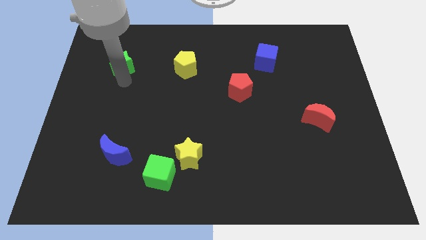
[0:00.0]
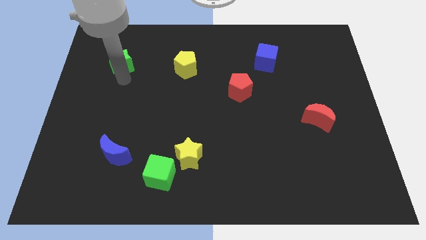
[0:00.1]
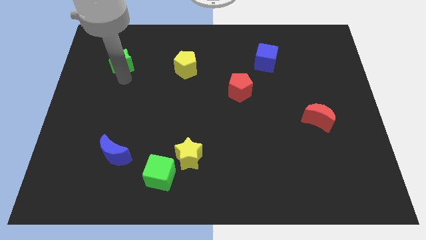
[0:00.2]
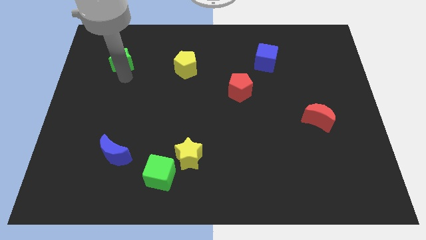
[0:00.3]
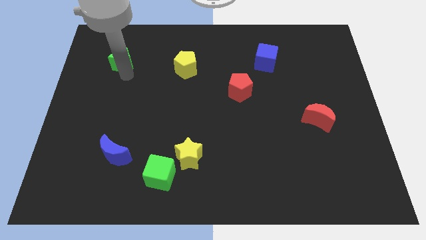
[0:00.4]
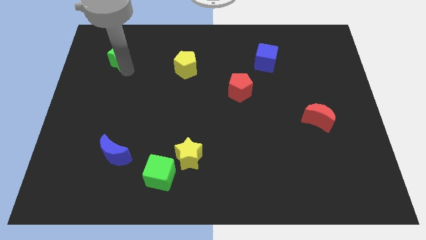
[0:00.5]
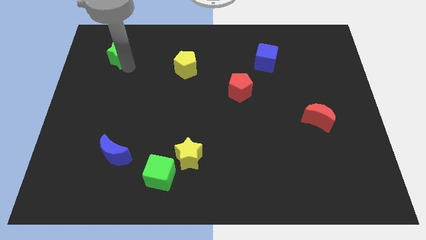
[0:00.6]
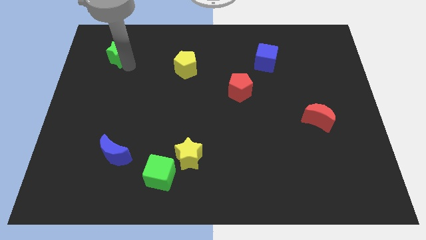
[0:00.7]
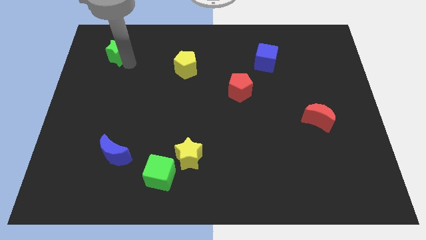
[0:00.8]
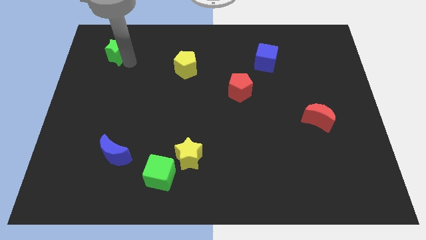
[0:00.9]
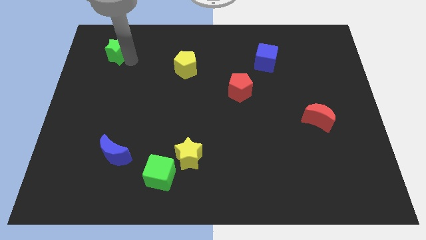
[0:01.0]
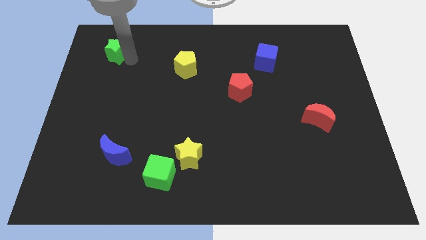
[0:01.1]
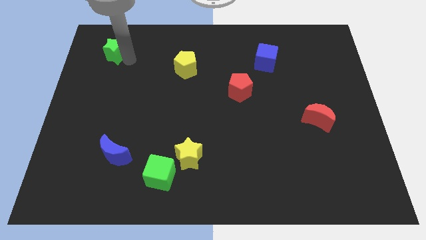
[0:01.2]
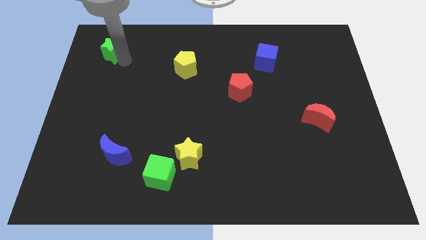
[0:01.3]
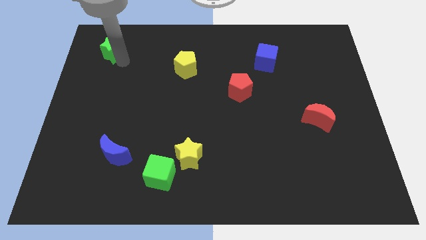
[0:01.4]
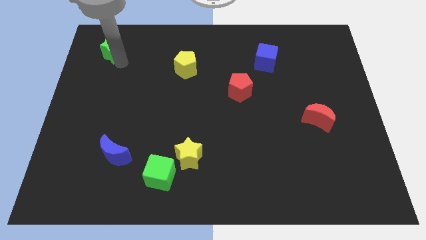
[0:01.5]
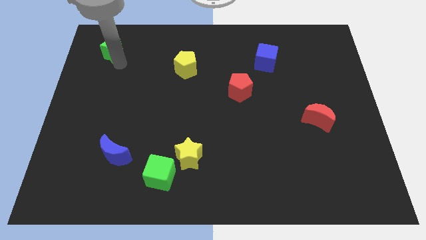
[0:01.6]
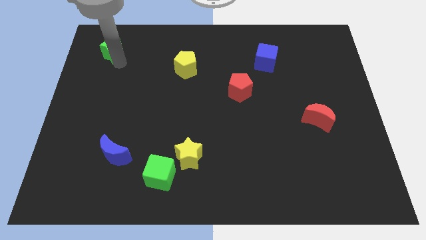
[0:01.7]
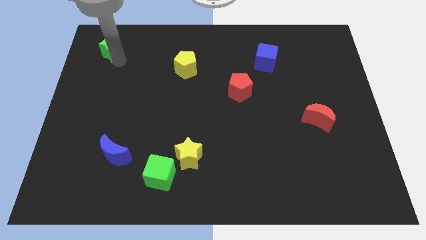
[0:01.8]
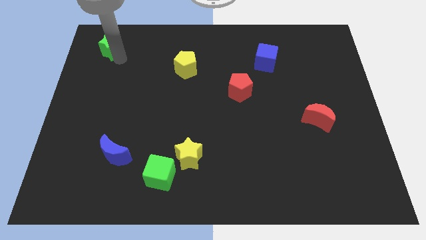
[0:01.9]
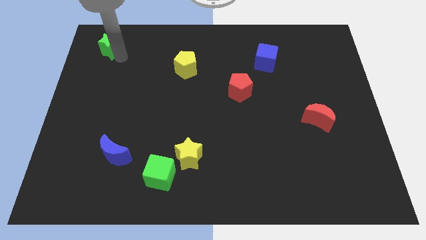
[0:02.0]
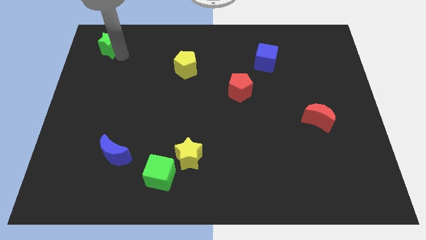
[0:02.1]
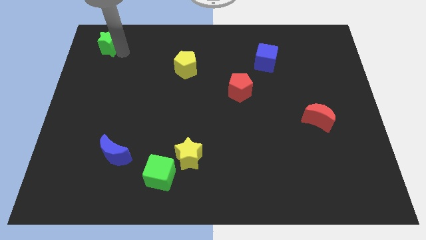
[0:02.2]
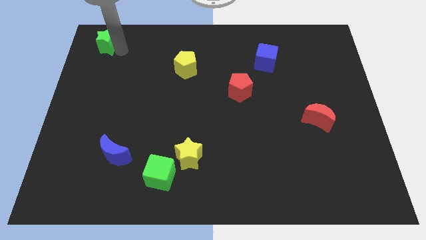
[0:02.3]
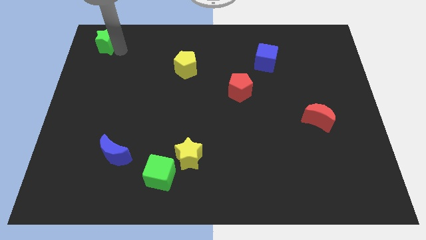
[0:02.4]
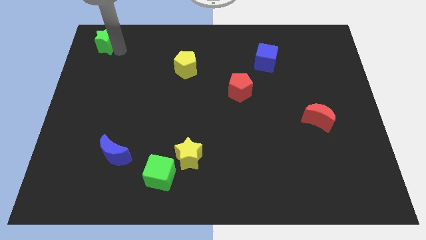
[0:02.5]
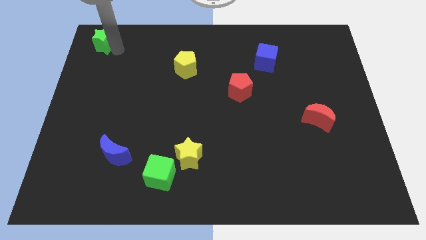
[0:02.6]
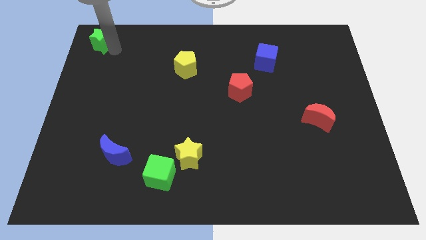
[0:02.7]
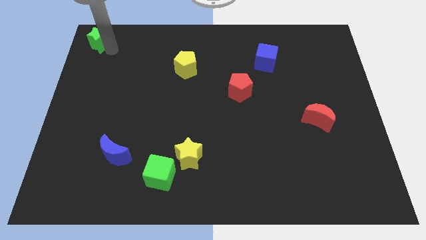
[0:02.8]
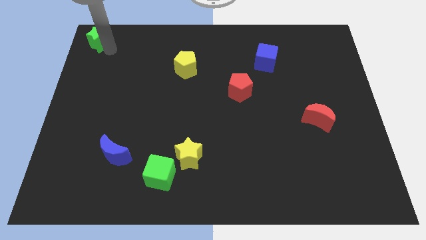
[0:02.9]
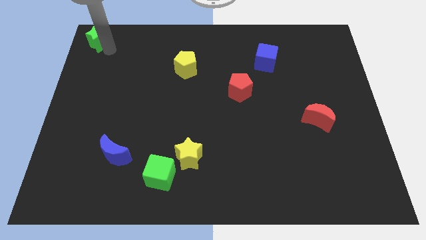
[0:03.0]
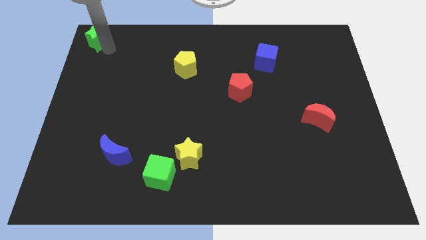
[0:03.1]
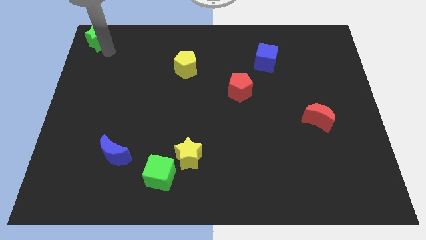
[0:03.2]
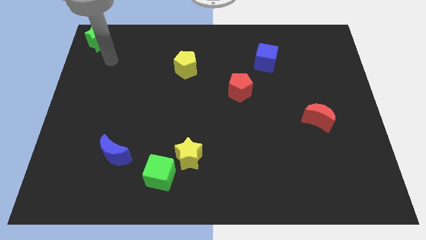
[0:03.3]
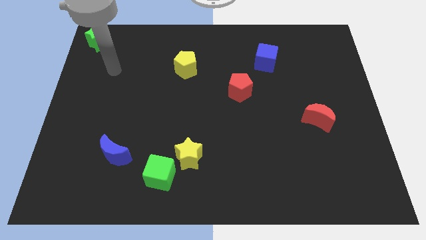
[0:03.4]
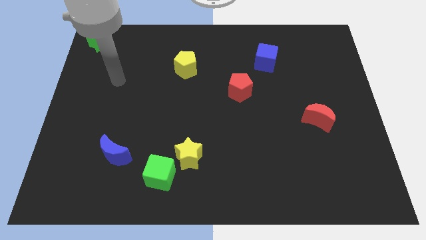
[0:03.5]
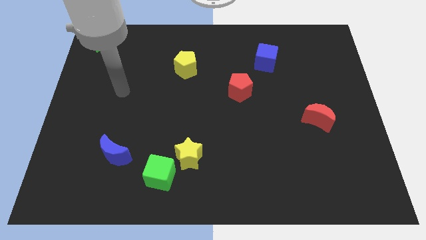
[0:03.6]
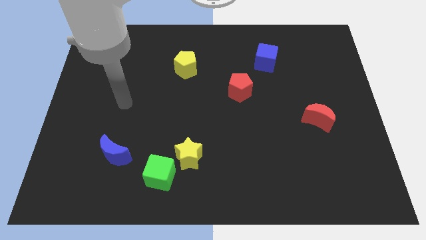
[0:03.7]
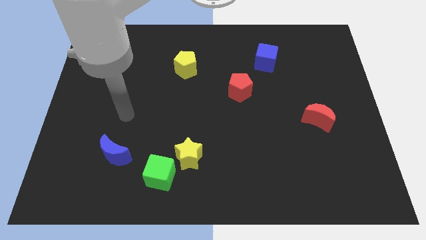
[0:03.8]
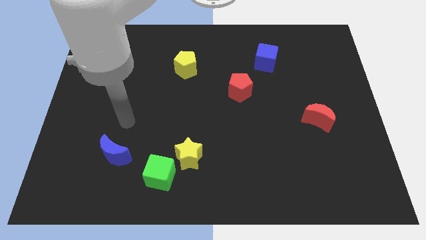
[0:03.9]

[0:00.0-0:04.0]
push the green star to the top left corner of the board

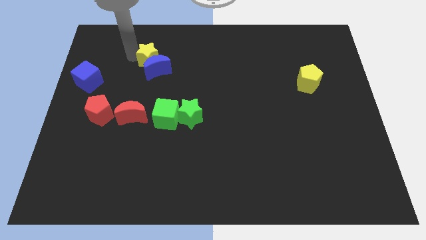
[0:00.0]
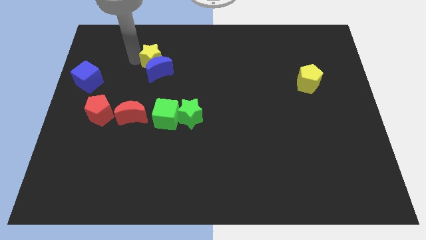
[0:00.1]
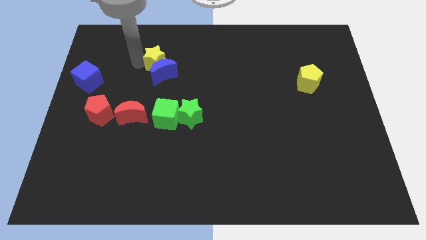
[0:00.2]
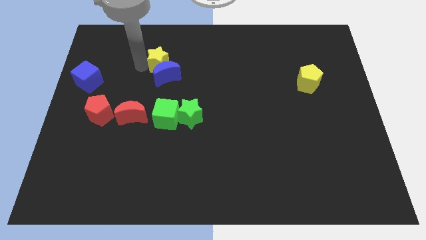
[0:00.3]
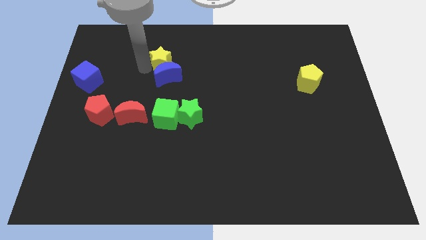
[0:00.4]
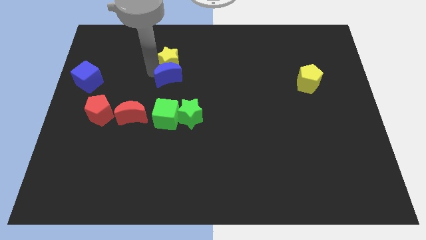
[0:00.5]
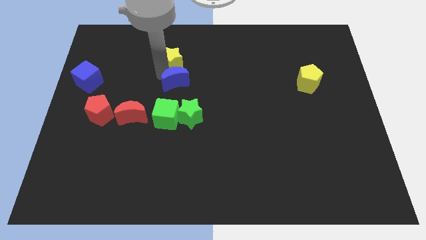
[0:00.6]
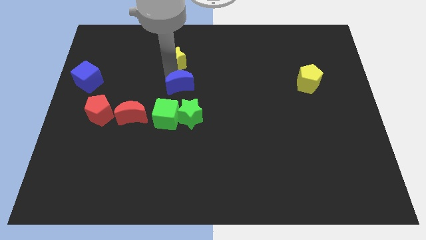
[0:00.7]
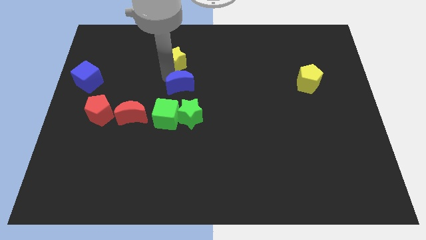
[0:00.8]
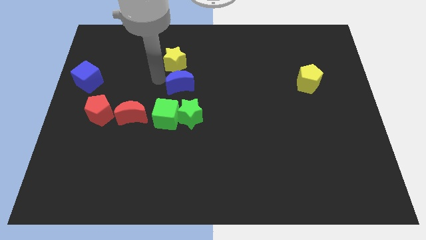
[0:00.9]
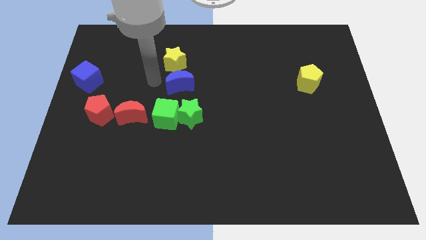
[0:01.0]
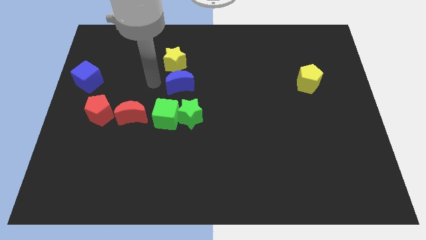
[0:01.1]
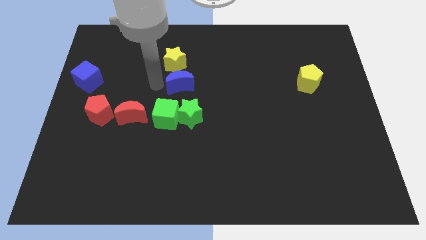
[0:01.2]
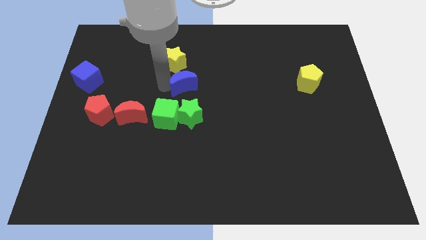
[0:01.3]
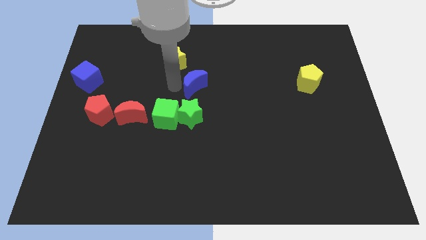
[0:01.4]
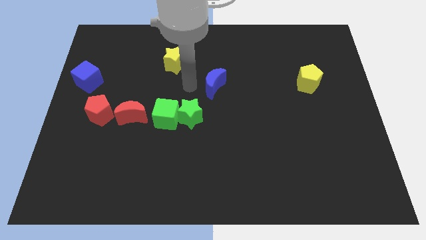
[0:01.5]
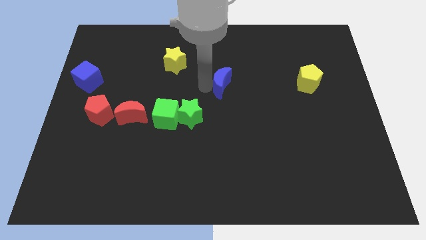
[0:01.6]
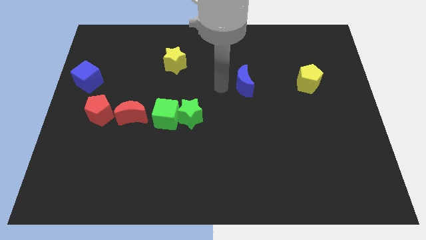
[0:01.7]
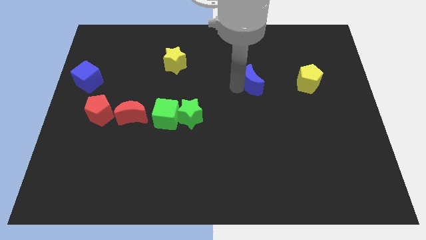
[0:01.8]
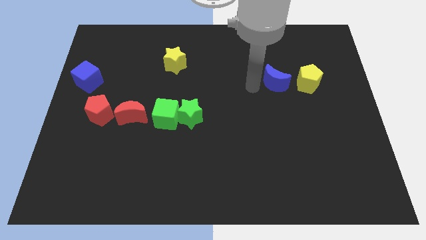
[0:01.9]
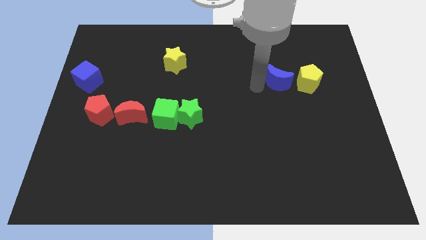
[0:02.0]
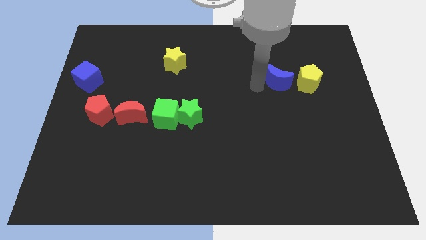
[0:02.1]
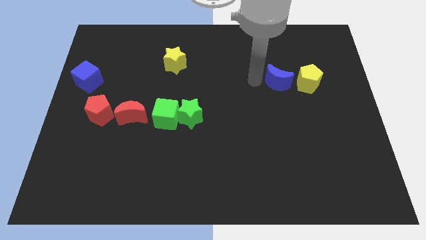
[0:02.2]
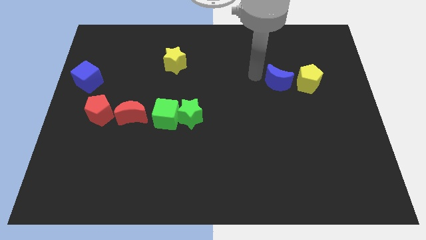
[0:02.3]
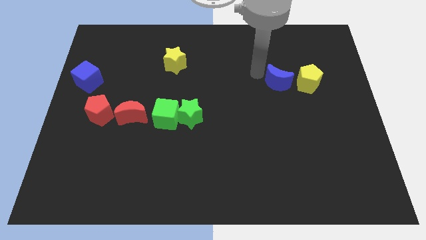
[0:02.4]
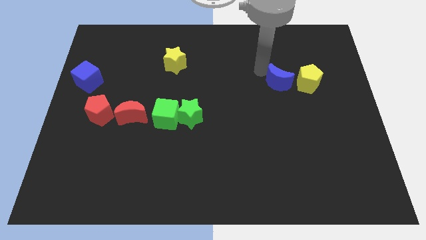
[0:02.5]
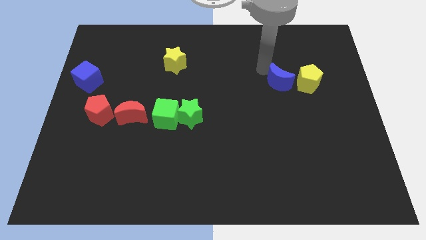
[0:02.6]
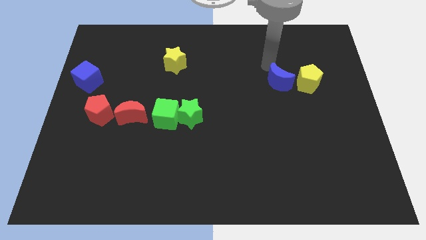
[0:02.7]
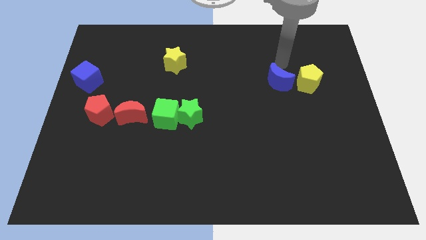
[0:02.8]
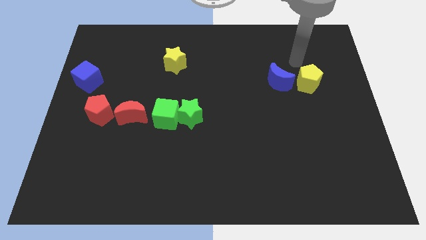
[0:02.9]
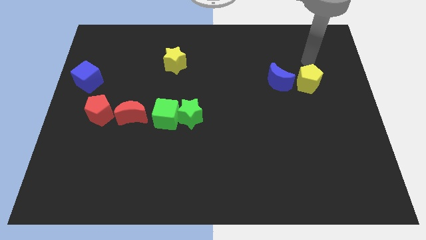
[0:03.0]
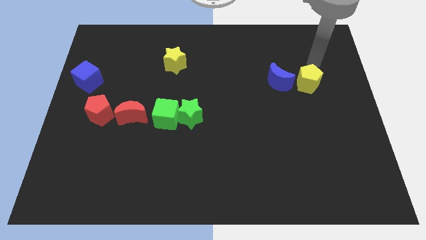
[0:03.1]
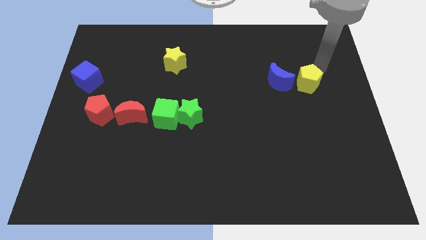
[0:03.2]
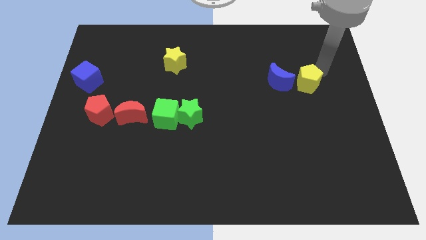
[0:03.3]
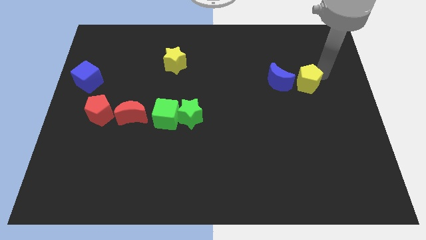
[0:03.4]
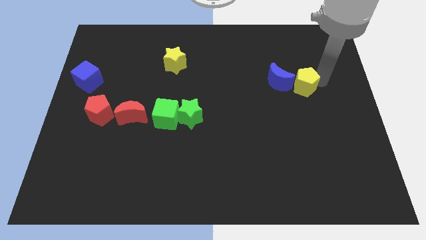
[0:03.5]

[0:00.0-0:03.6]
push the blue crescent into the yellow pentagon

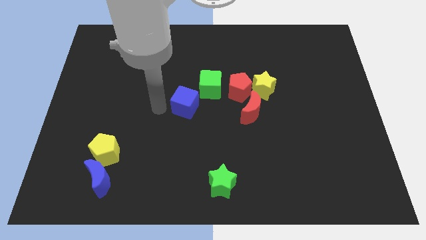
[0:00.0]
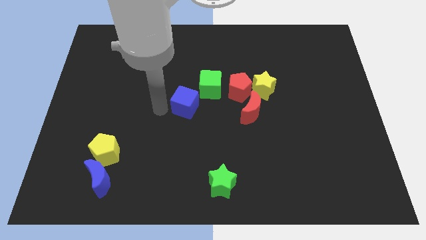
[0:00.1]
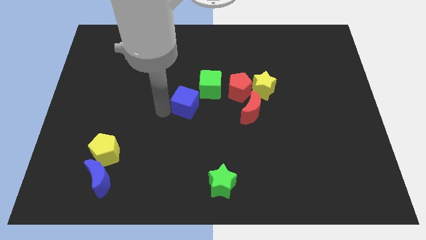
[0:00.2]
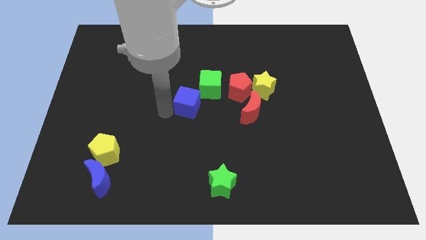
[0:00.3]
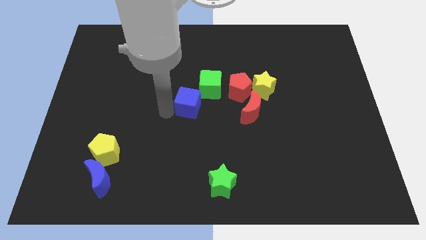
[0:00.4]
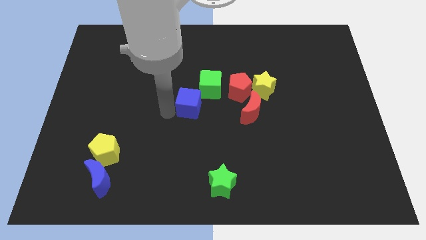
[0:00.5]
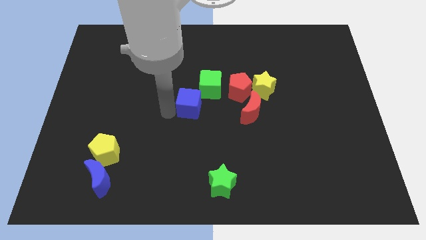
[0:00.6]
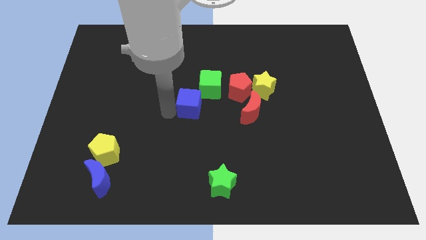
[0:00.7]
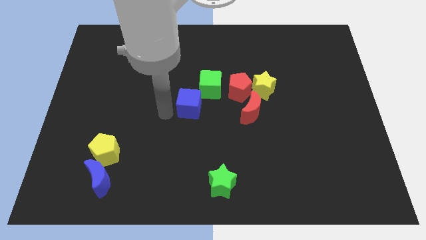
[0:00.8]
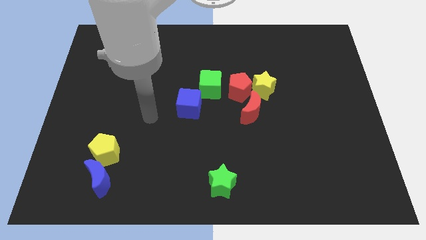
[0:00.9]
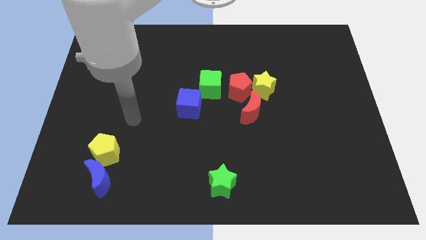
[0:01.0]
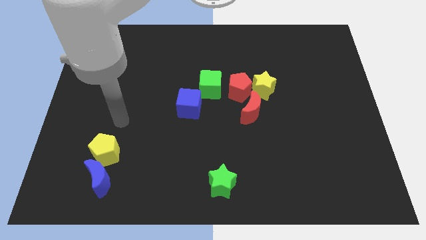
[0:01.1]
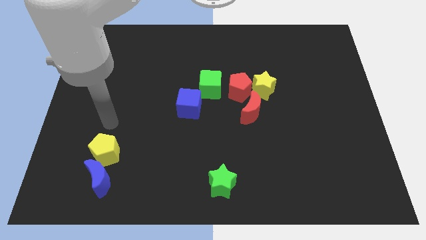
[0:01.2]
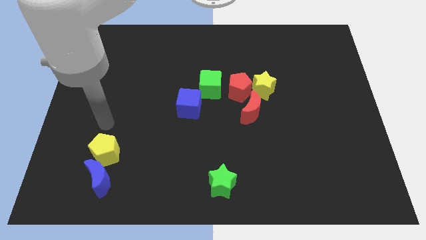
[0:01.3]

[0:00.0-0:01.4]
place the blue cube at the bottom left side of green cube
